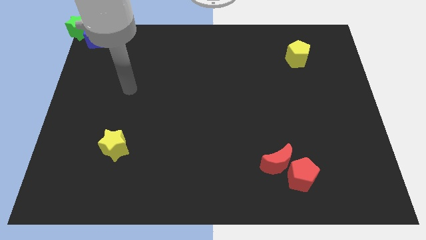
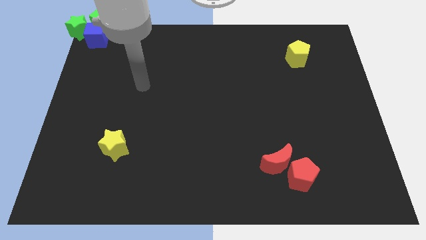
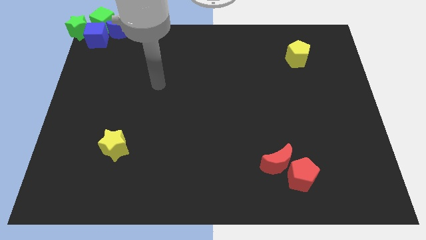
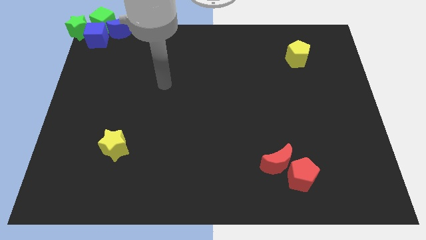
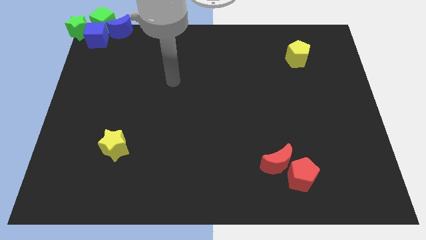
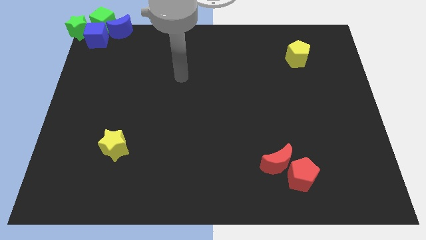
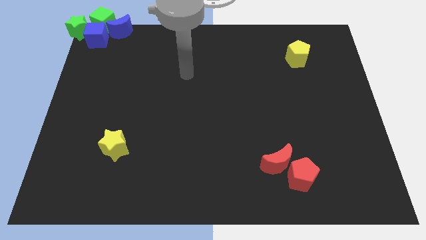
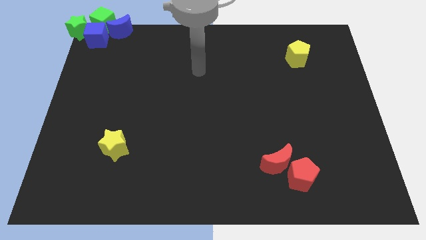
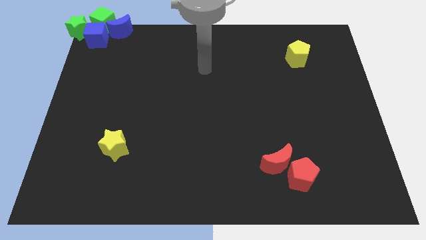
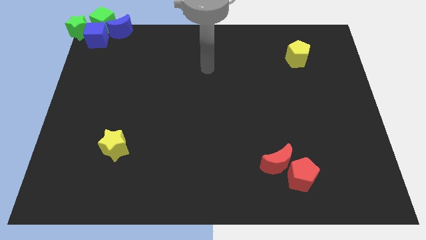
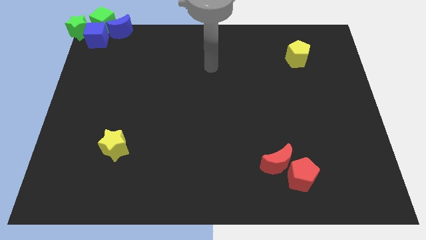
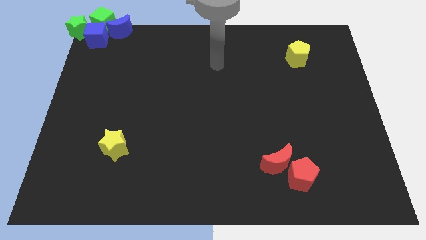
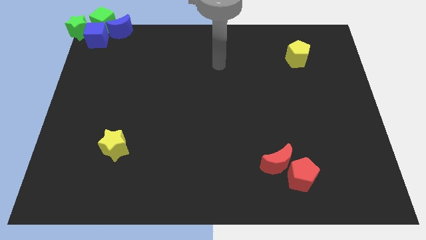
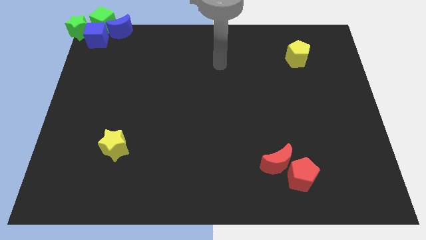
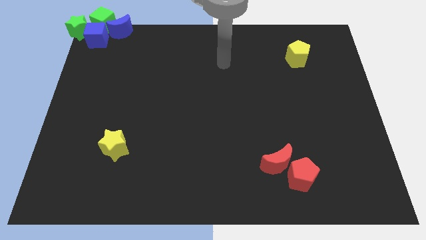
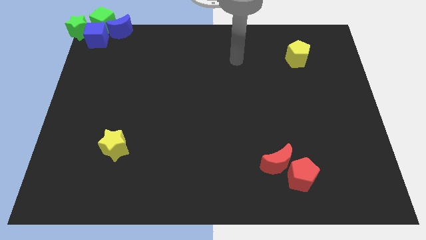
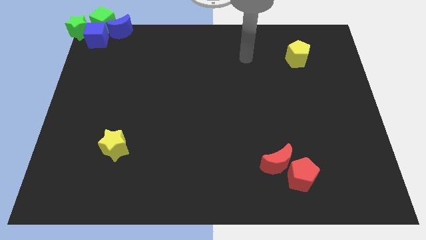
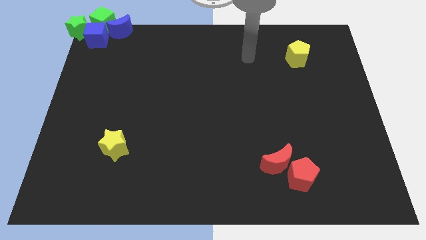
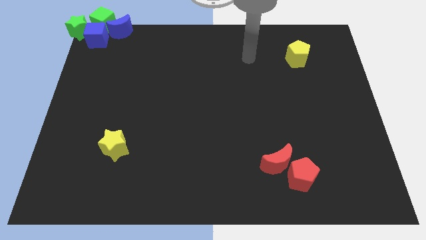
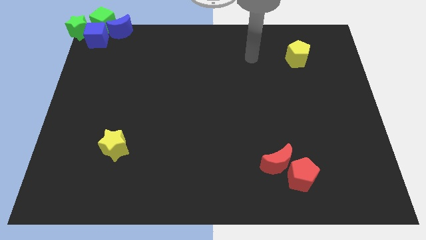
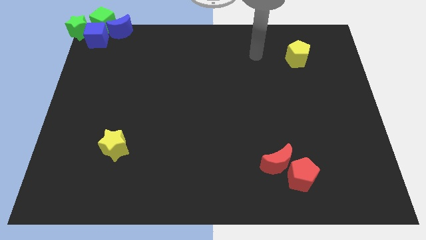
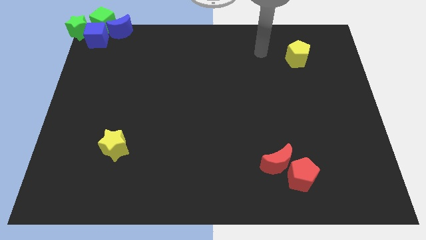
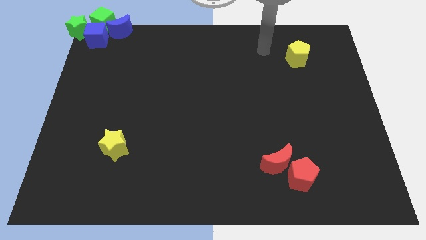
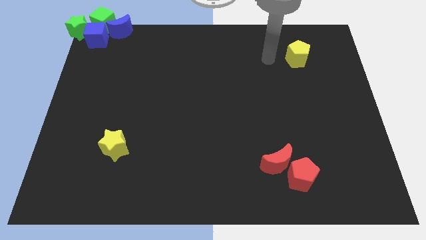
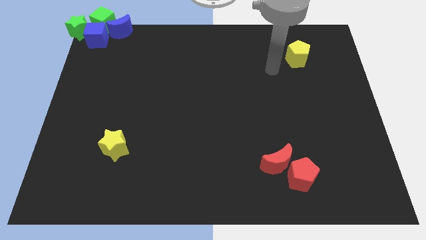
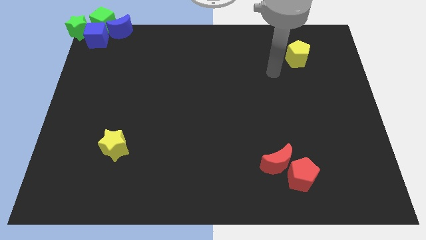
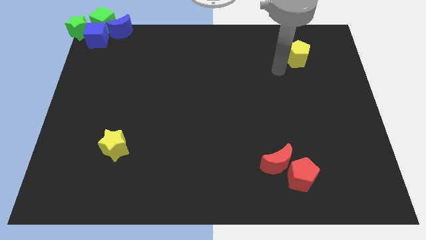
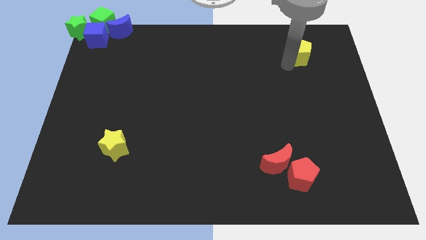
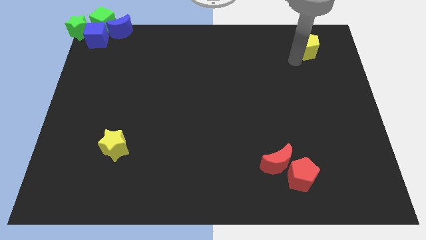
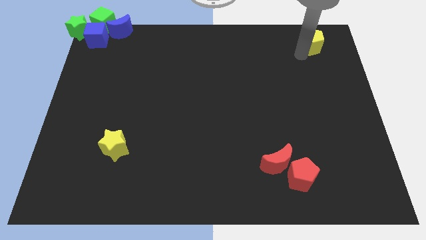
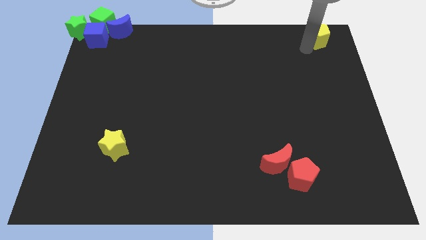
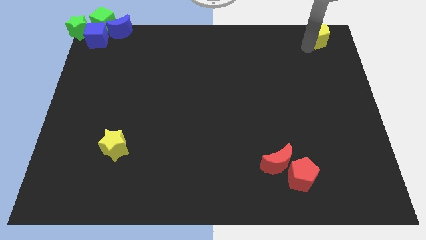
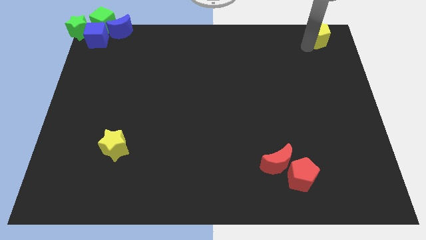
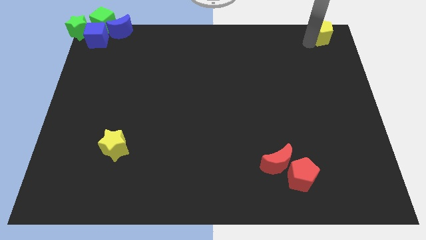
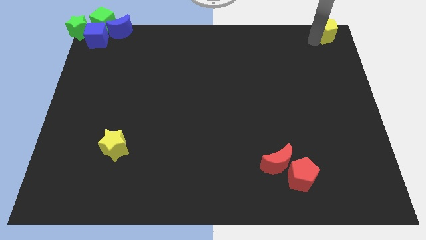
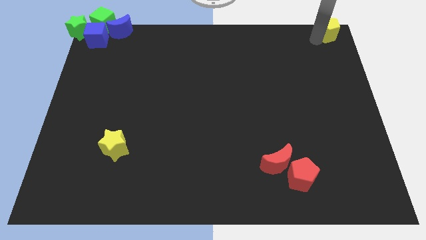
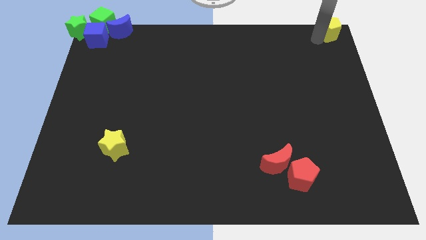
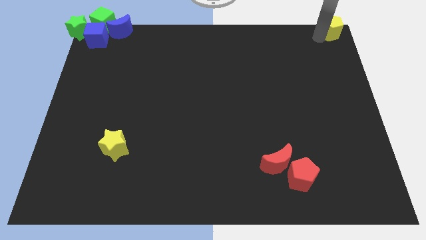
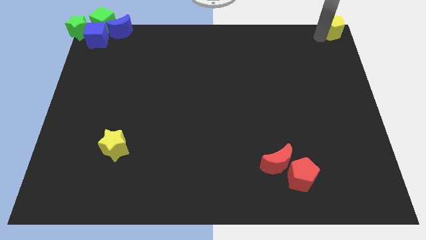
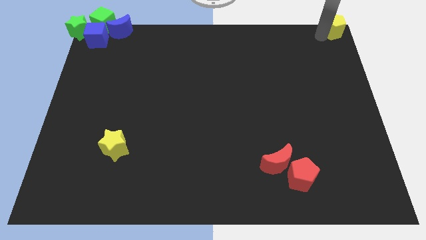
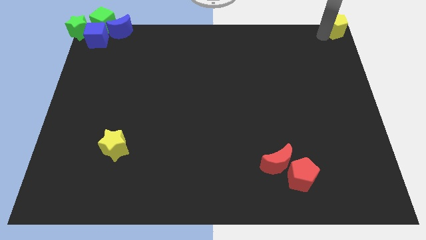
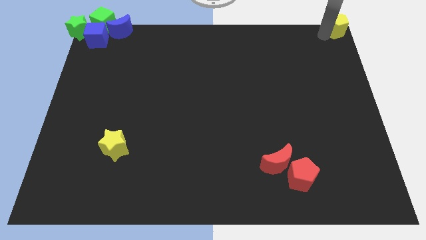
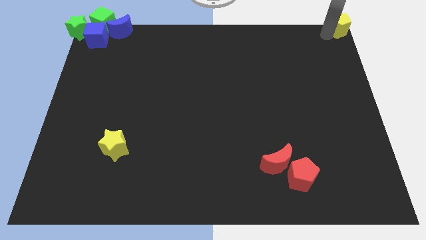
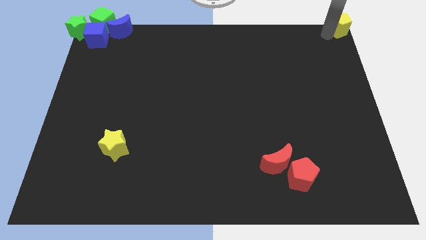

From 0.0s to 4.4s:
slide the yellow pentagon to the top right corner of the board

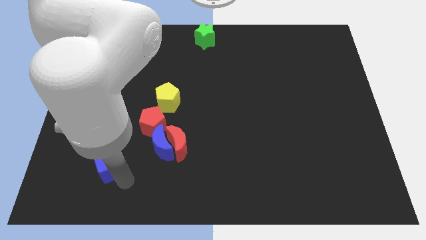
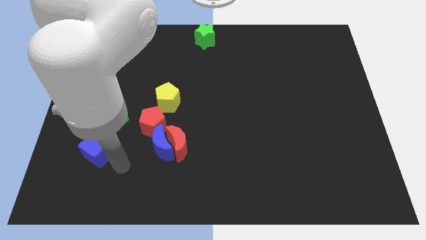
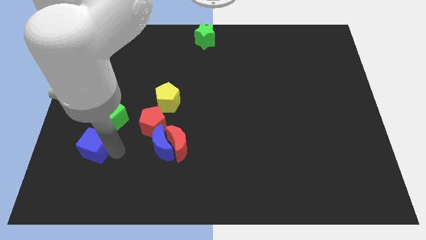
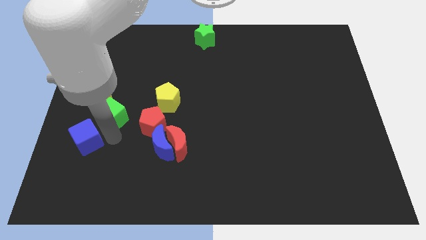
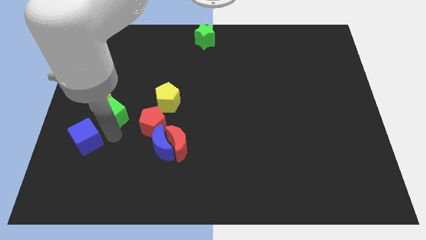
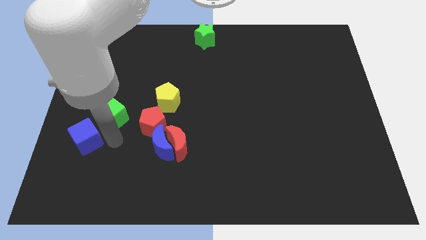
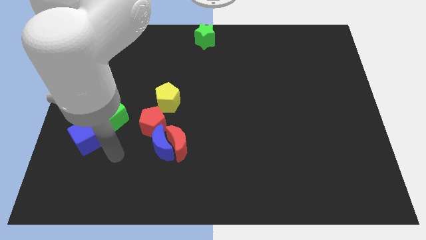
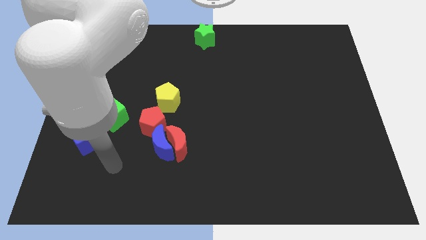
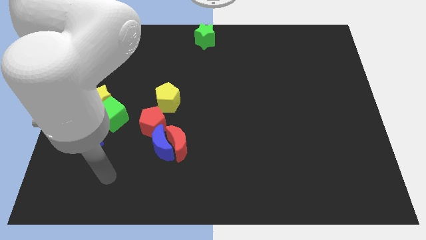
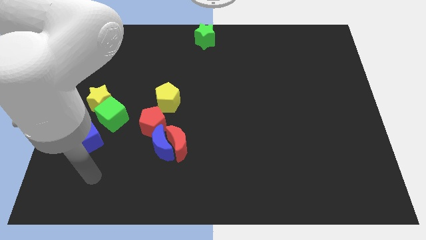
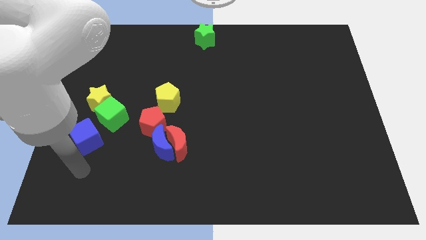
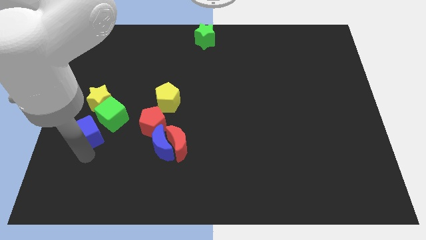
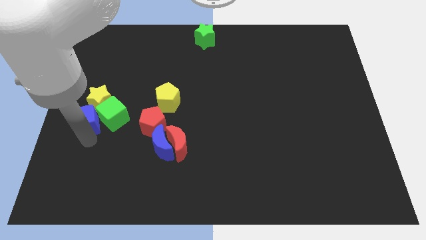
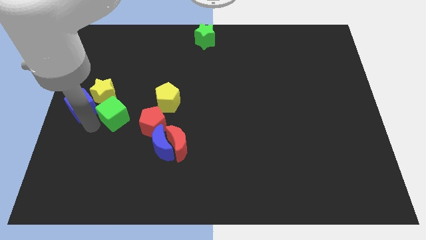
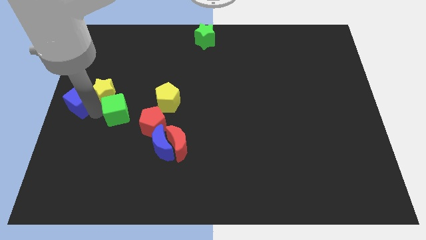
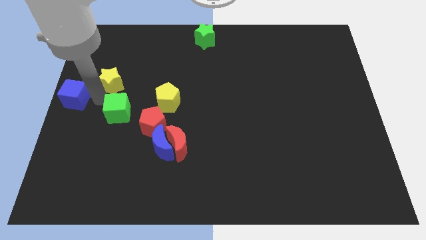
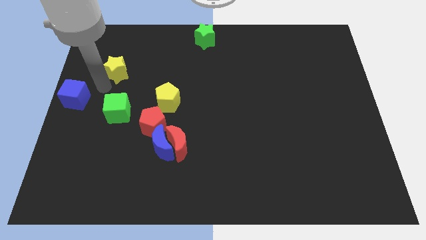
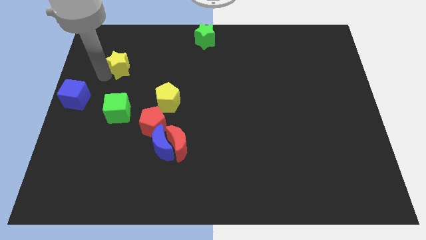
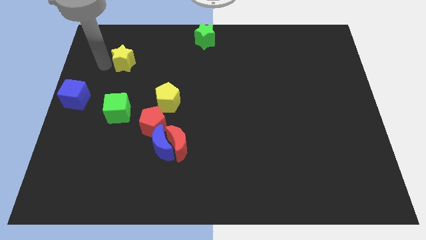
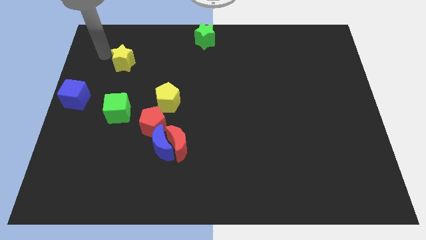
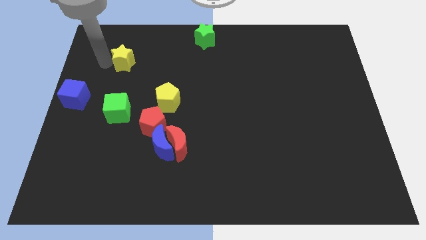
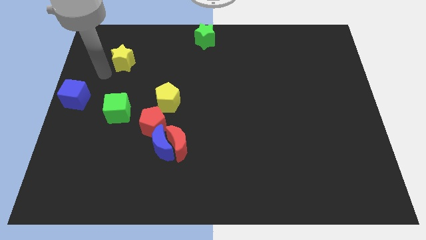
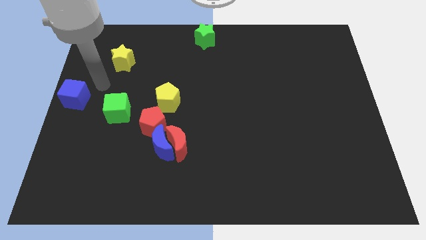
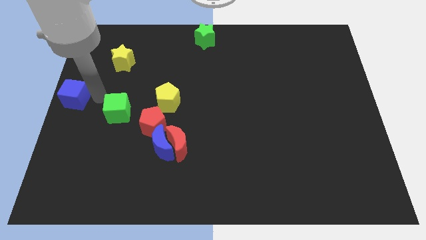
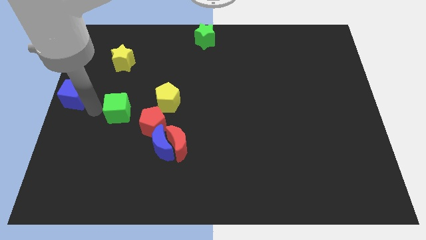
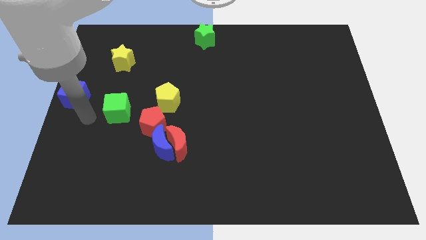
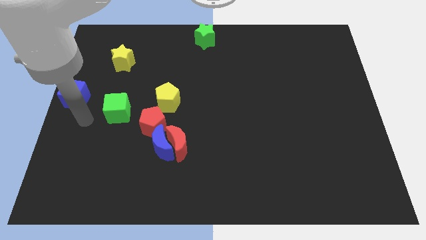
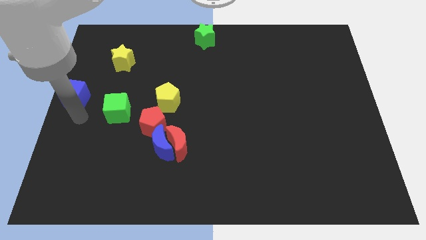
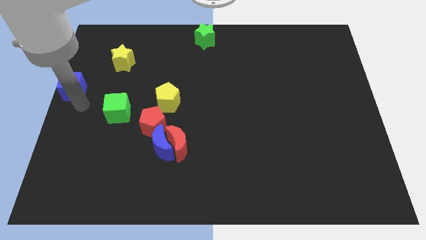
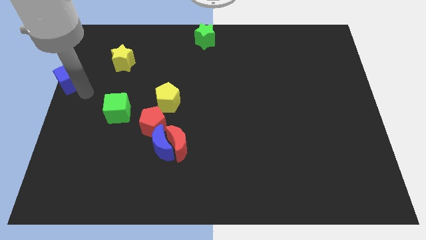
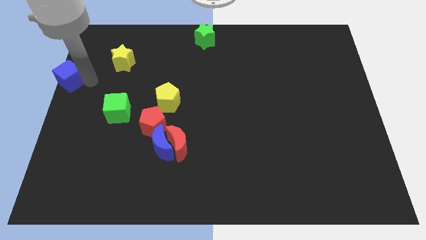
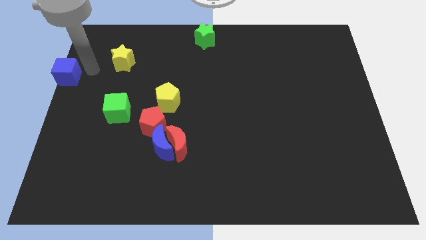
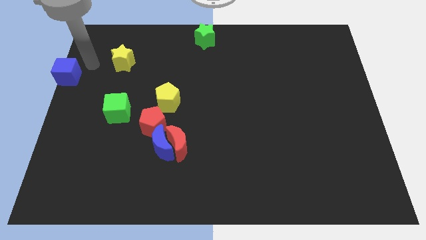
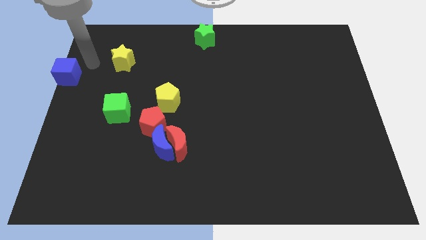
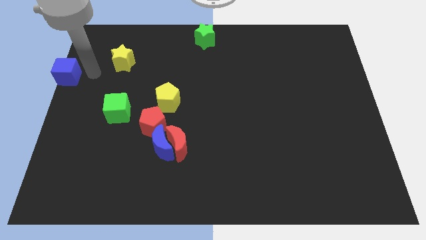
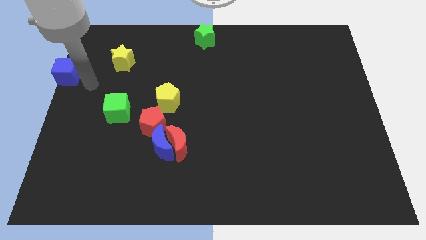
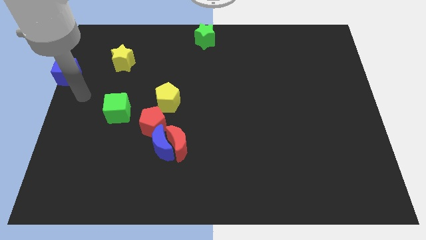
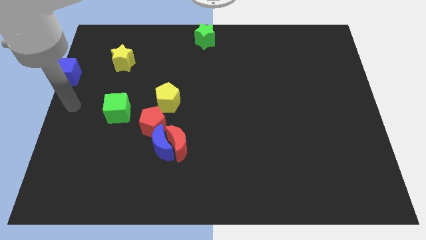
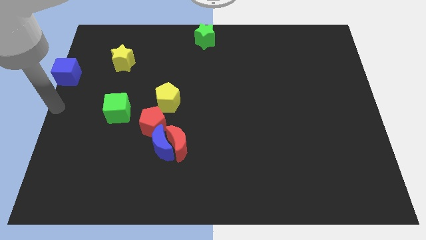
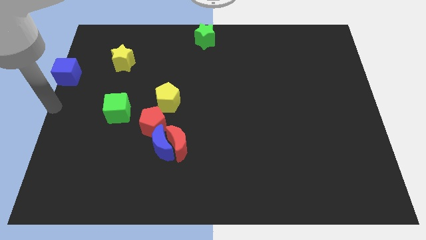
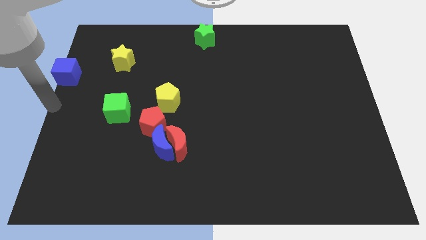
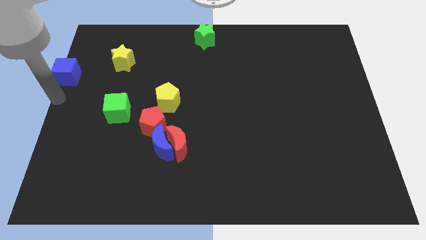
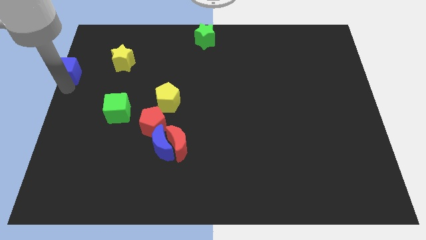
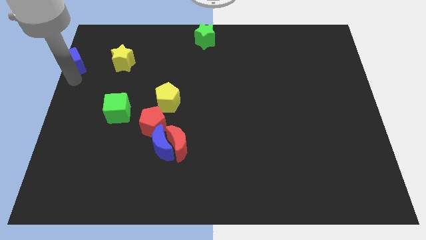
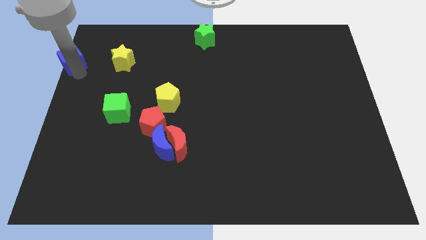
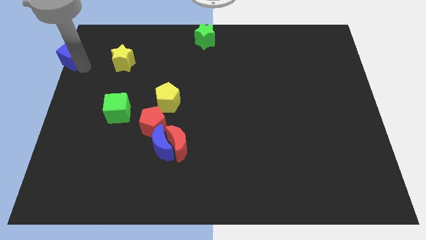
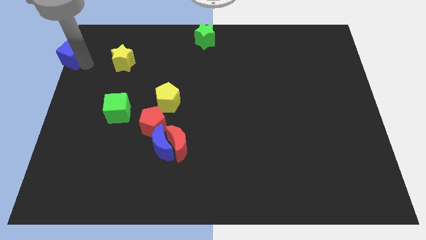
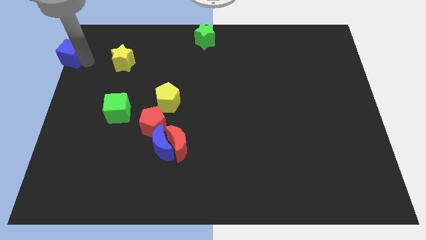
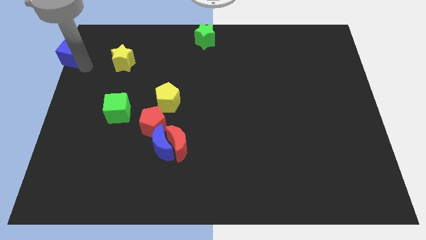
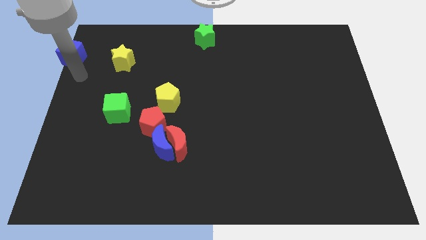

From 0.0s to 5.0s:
place the blue cube to the left of the yellow star
